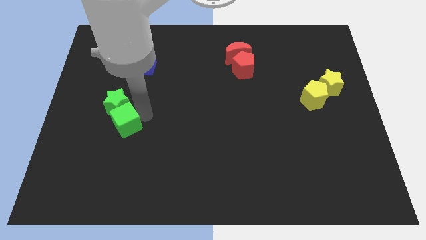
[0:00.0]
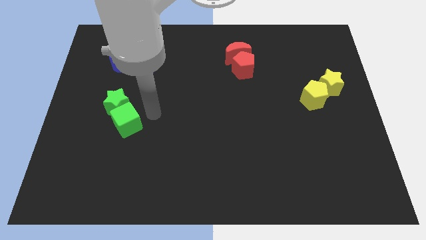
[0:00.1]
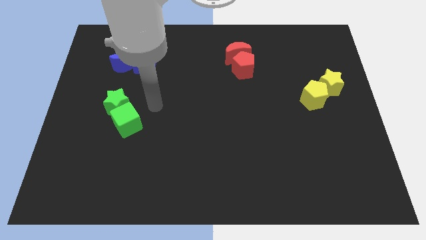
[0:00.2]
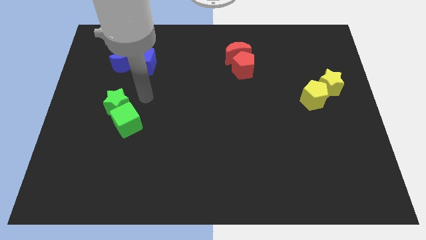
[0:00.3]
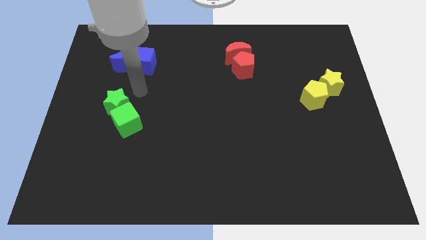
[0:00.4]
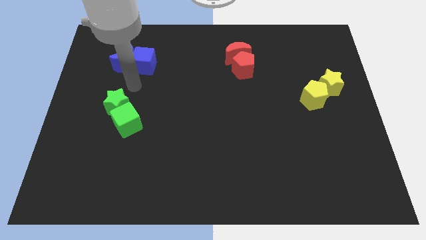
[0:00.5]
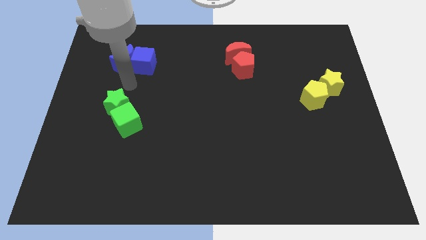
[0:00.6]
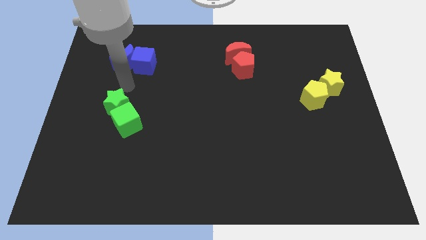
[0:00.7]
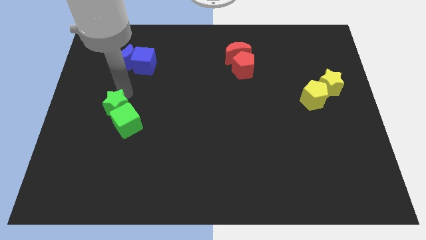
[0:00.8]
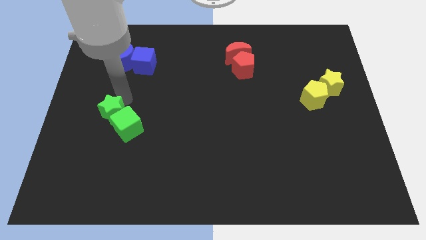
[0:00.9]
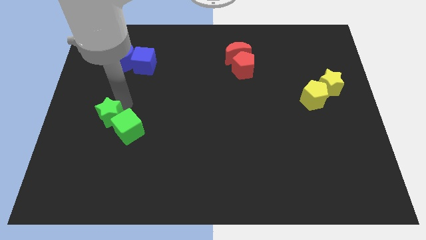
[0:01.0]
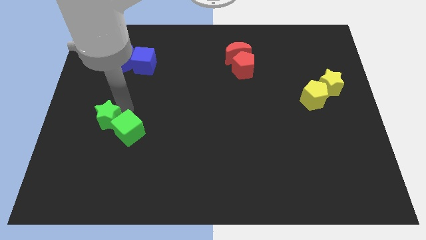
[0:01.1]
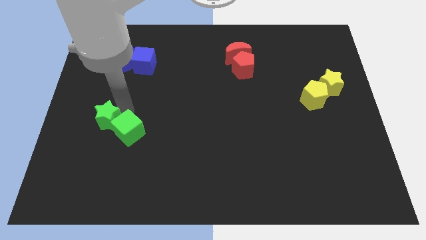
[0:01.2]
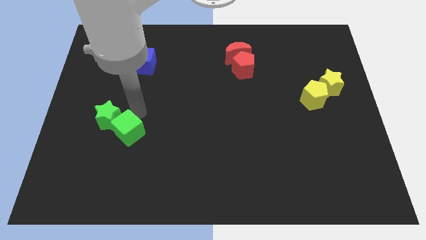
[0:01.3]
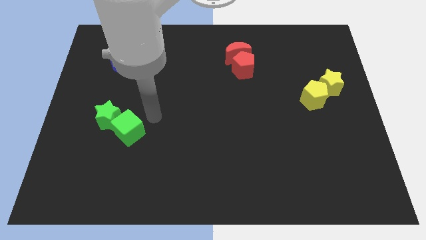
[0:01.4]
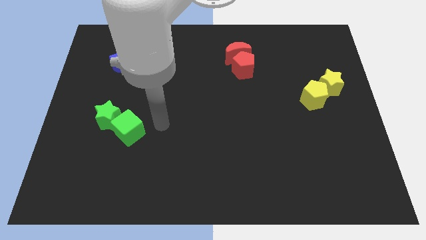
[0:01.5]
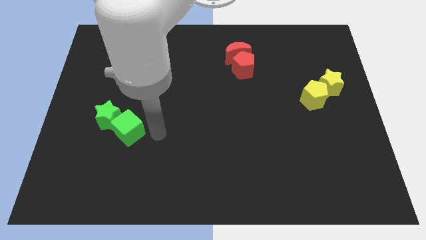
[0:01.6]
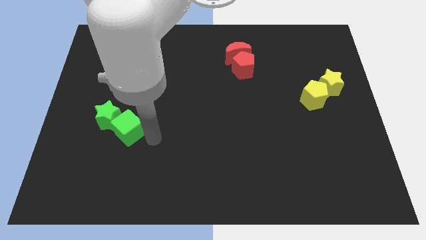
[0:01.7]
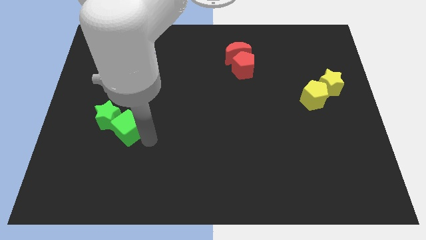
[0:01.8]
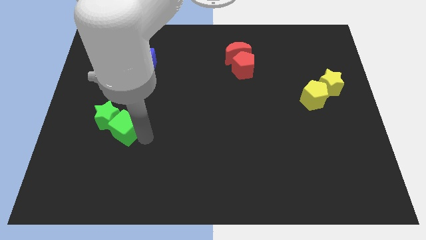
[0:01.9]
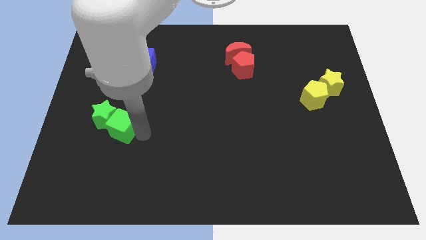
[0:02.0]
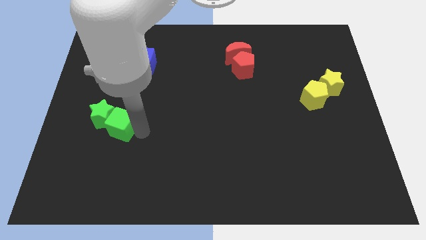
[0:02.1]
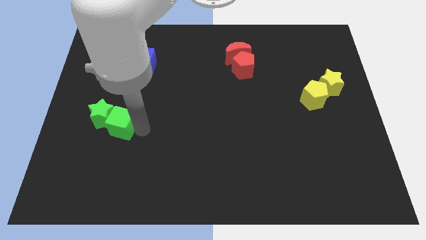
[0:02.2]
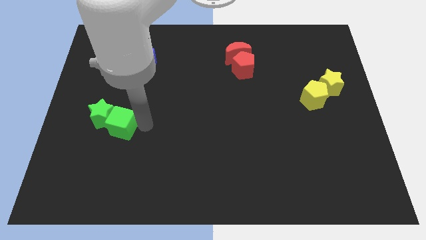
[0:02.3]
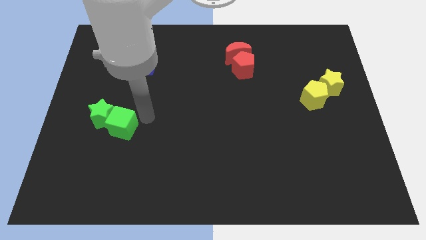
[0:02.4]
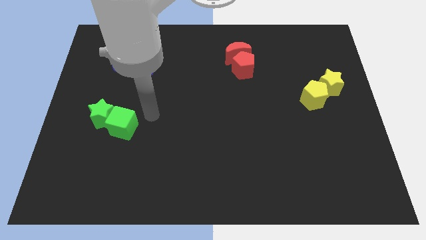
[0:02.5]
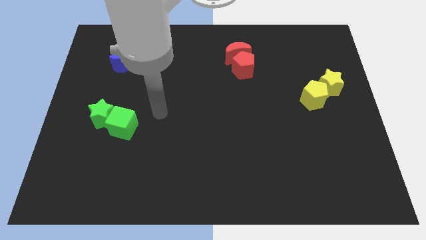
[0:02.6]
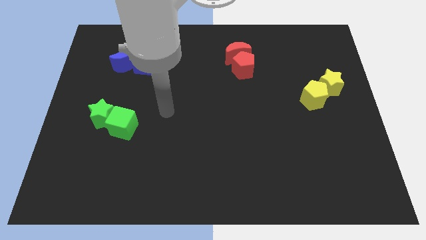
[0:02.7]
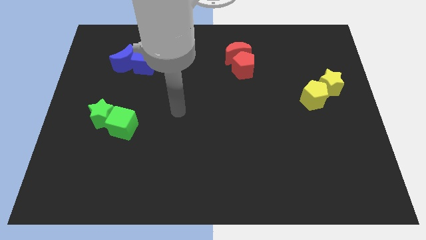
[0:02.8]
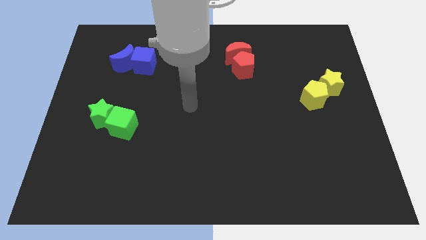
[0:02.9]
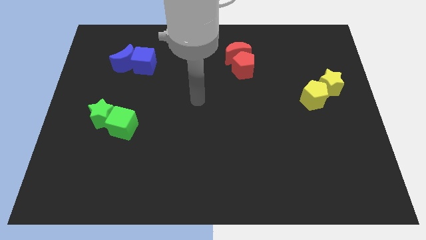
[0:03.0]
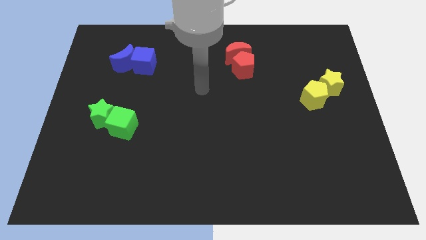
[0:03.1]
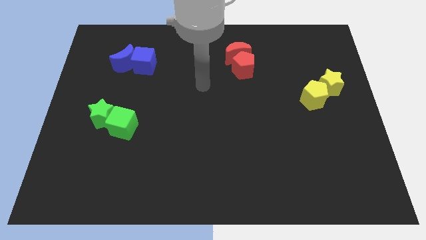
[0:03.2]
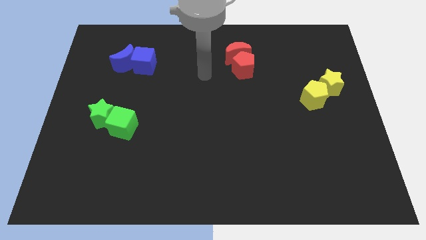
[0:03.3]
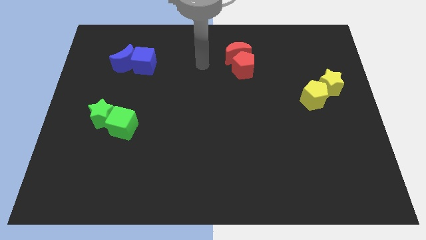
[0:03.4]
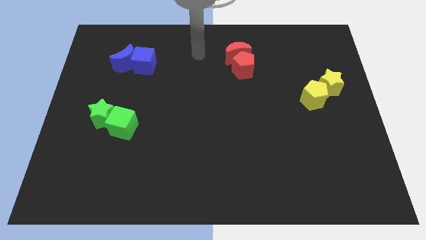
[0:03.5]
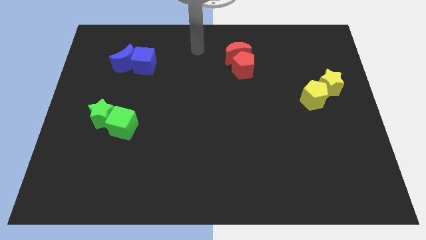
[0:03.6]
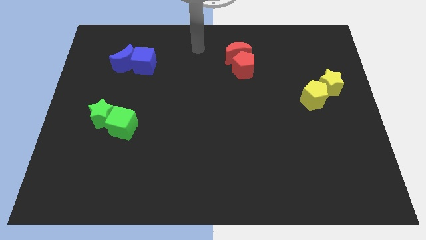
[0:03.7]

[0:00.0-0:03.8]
move the green blocks slightly to the left of the board

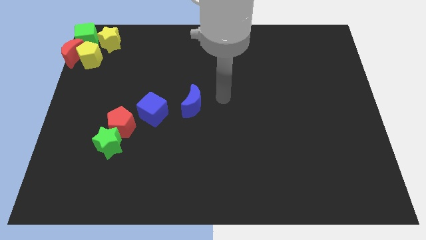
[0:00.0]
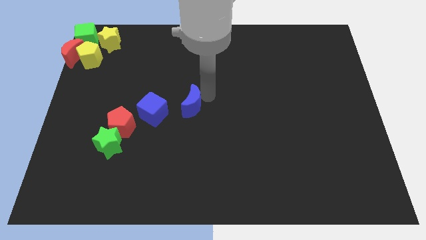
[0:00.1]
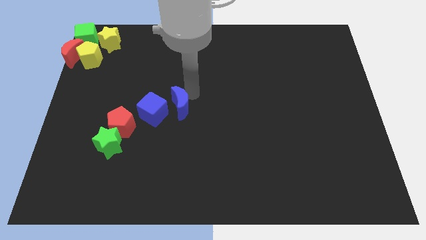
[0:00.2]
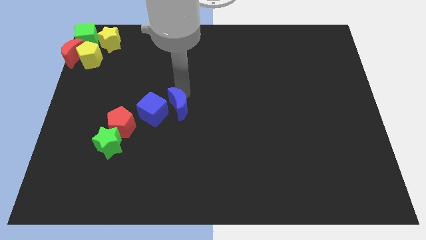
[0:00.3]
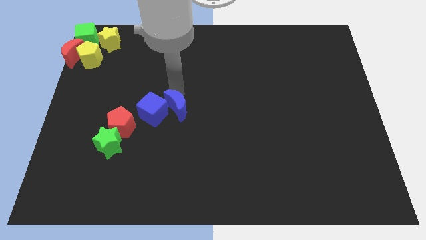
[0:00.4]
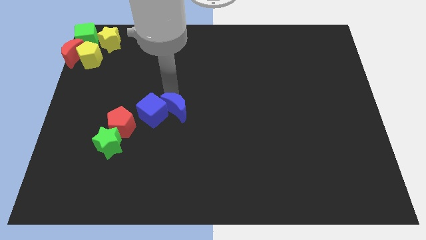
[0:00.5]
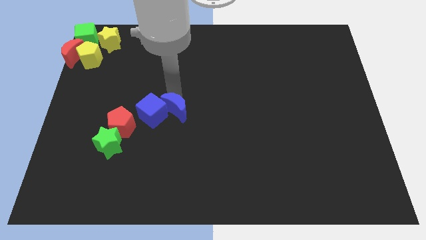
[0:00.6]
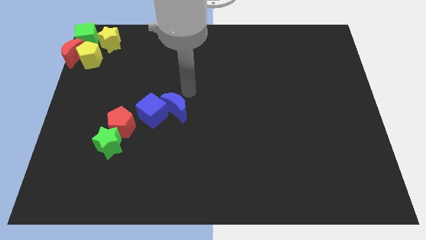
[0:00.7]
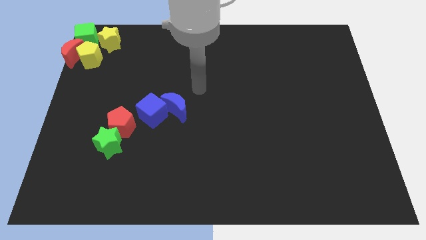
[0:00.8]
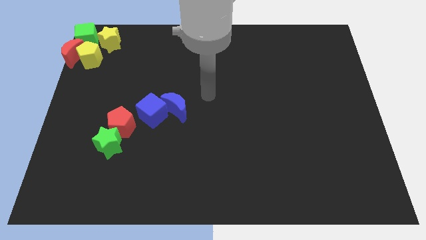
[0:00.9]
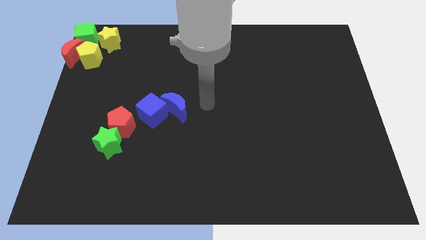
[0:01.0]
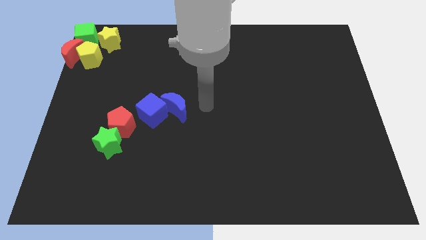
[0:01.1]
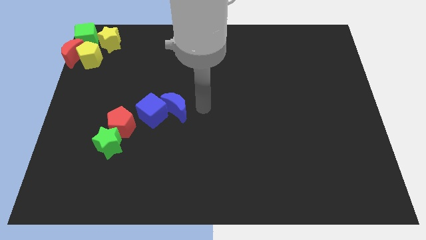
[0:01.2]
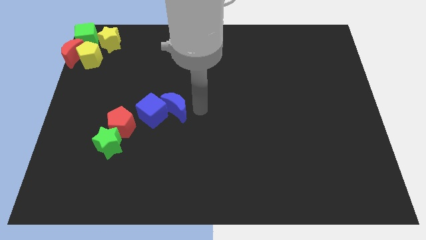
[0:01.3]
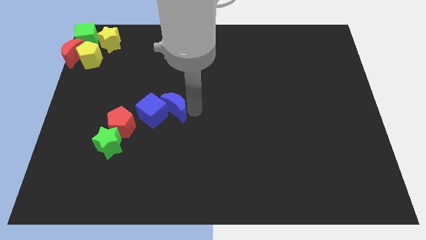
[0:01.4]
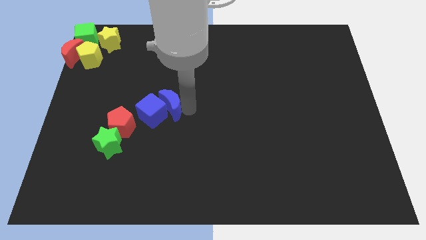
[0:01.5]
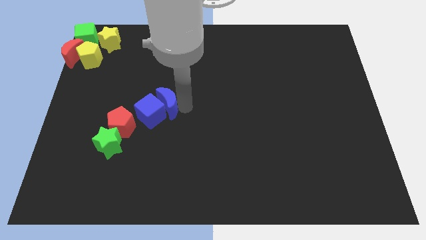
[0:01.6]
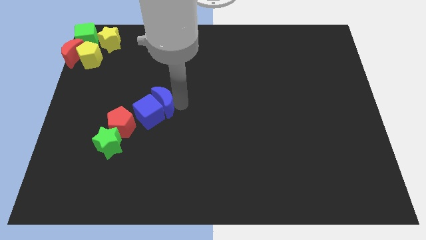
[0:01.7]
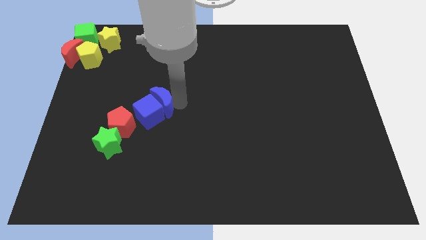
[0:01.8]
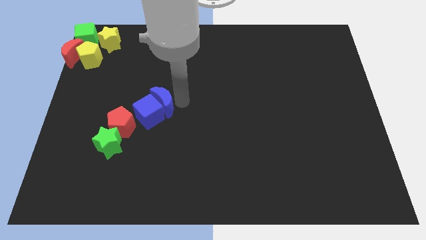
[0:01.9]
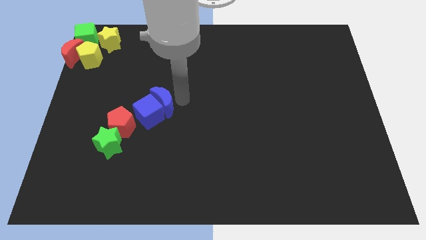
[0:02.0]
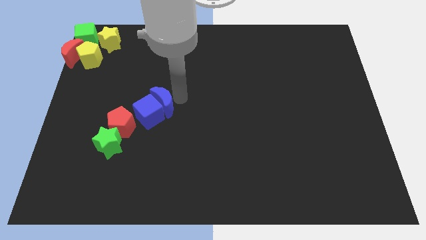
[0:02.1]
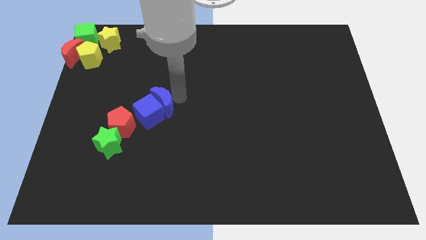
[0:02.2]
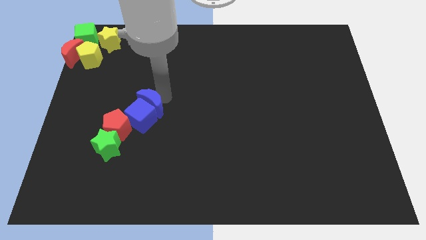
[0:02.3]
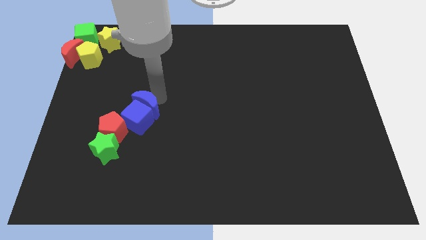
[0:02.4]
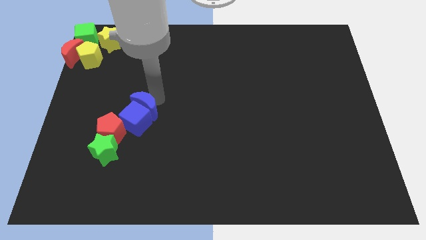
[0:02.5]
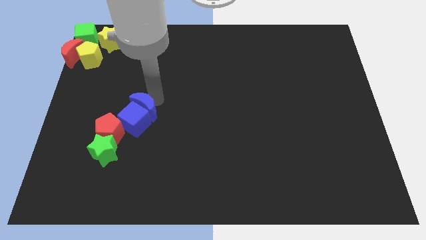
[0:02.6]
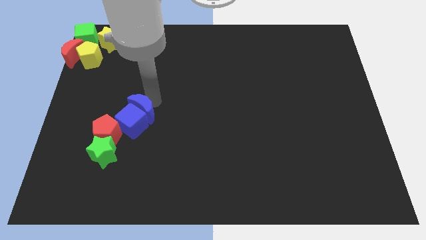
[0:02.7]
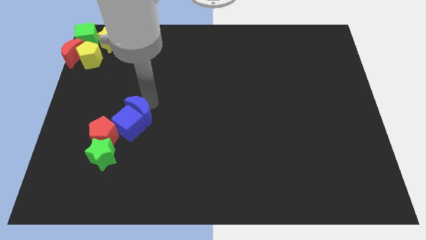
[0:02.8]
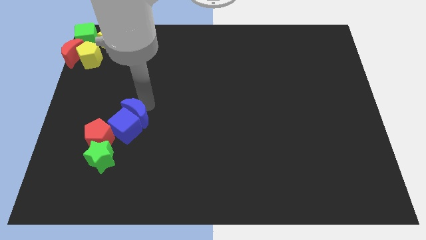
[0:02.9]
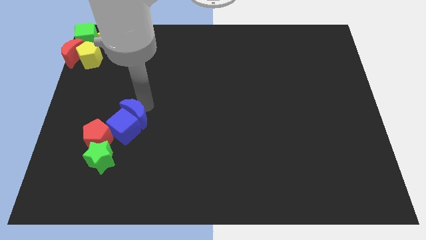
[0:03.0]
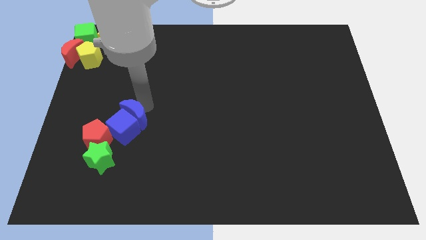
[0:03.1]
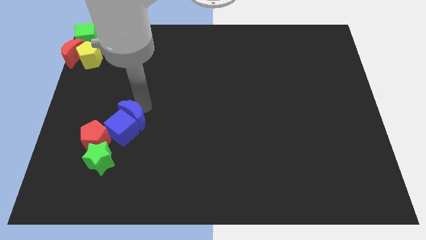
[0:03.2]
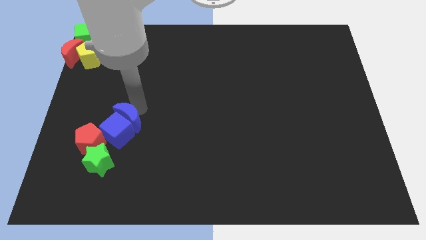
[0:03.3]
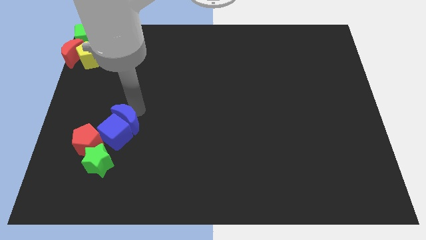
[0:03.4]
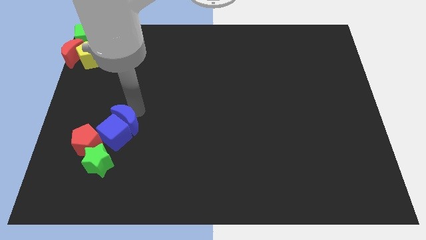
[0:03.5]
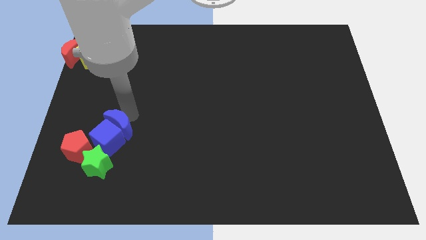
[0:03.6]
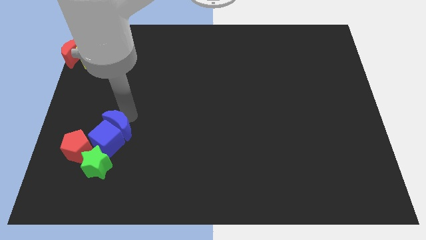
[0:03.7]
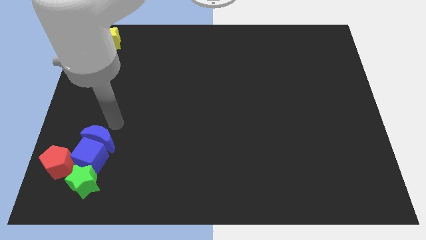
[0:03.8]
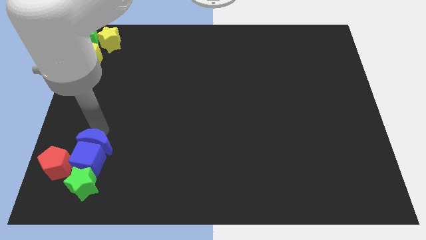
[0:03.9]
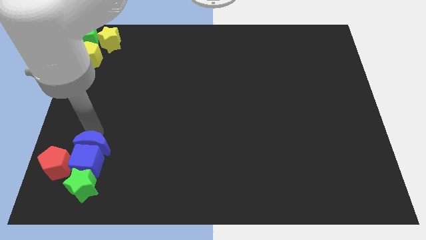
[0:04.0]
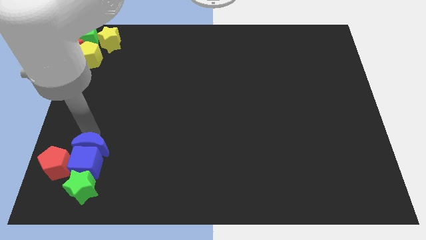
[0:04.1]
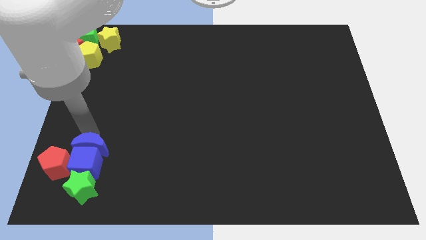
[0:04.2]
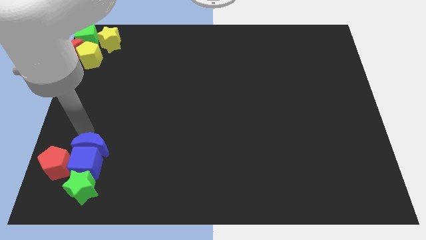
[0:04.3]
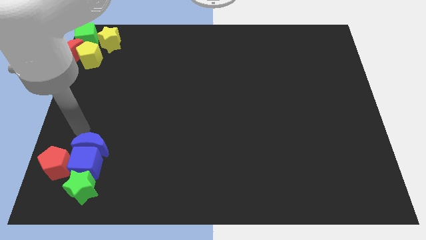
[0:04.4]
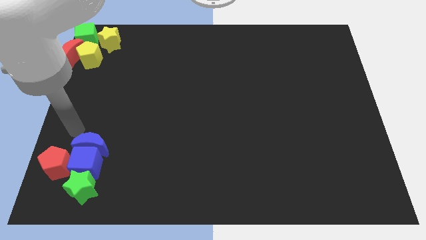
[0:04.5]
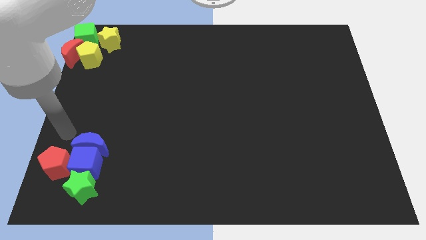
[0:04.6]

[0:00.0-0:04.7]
push the blue blocks green star and the red pentagon towards the bottom left

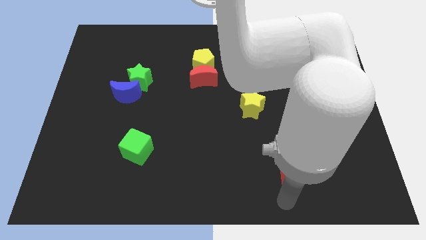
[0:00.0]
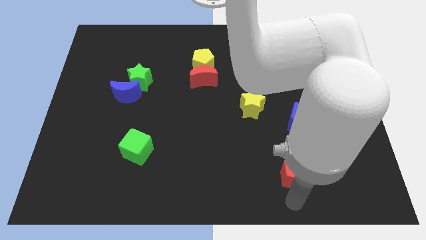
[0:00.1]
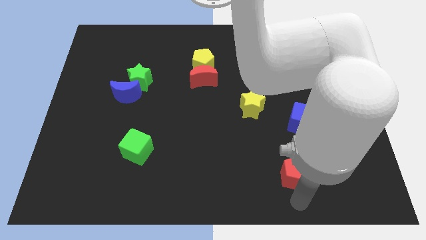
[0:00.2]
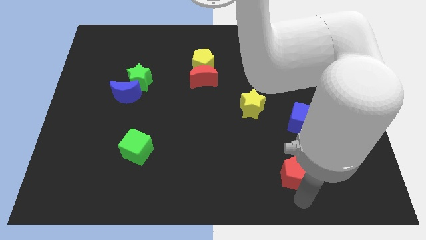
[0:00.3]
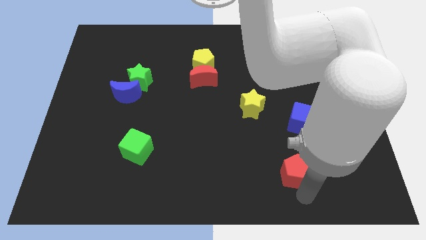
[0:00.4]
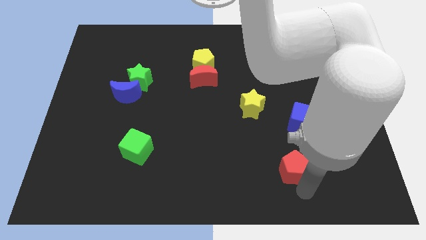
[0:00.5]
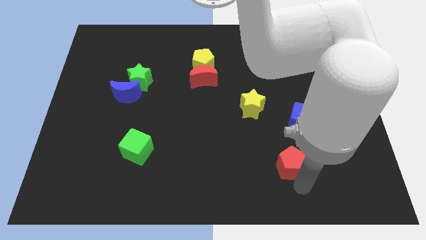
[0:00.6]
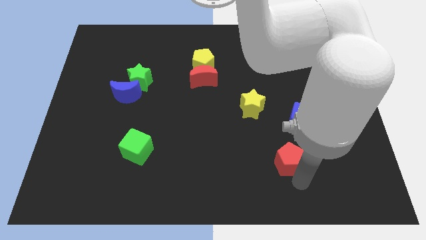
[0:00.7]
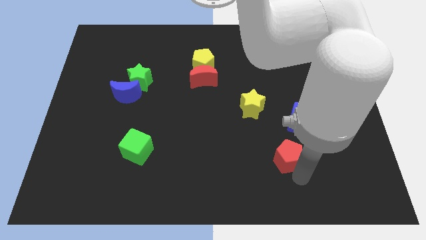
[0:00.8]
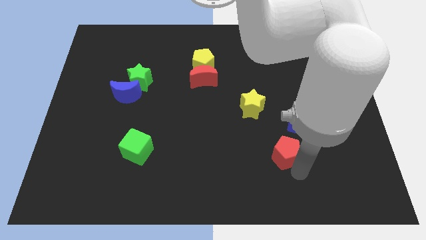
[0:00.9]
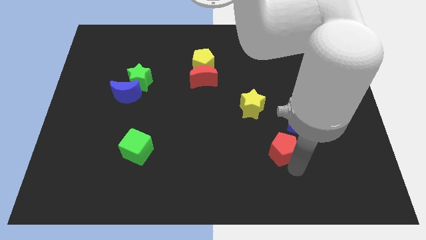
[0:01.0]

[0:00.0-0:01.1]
push the red pentagon upwards of the board
